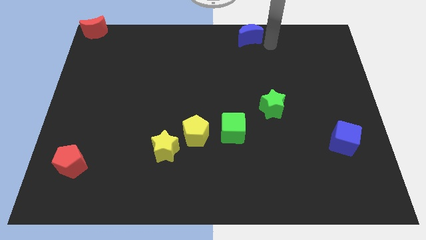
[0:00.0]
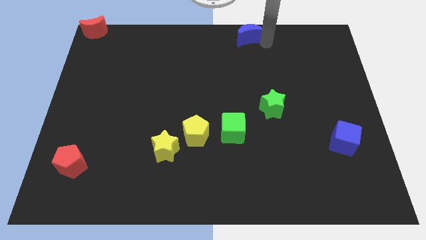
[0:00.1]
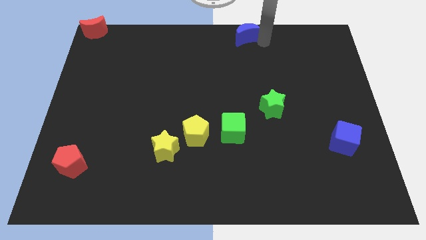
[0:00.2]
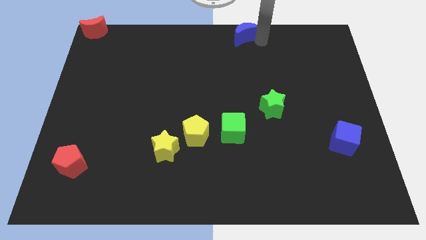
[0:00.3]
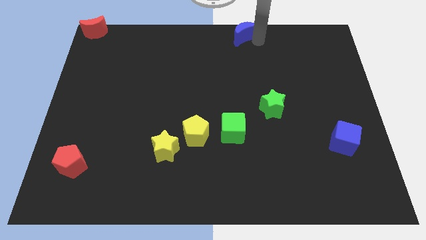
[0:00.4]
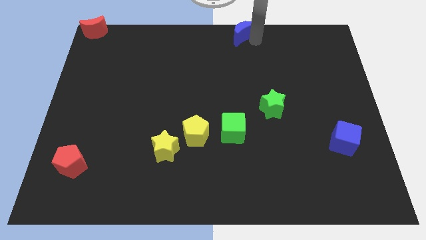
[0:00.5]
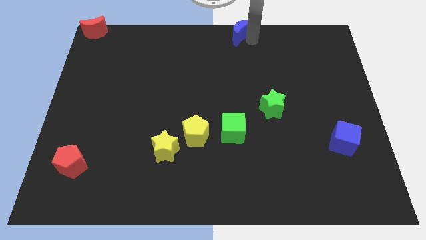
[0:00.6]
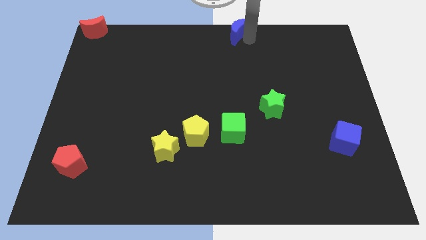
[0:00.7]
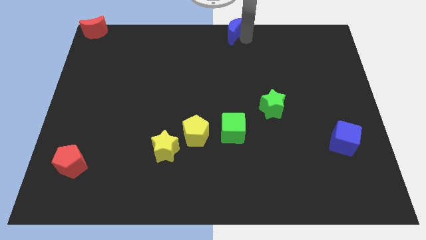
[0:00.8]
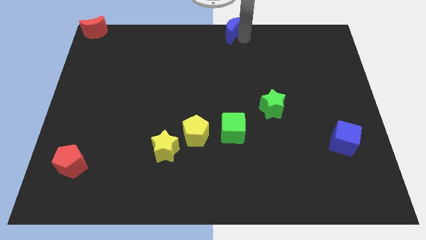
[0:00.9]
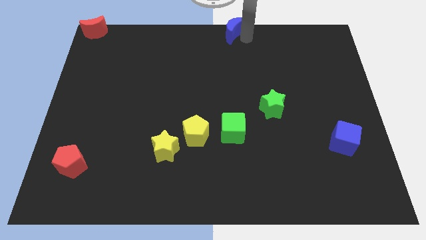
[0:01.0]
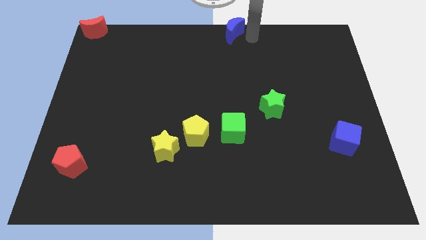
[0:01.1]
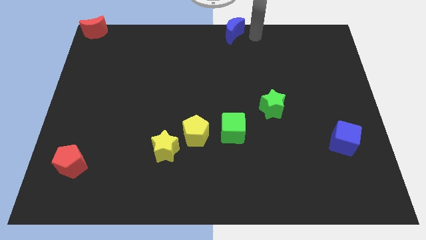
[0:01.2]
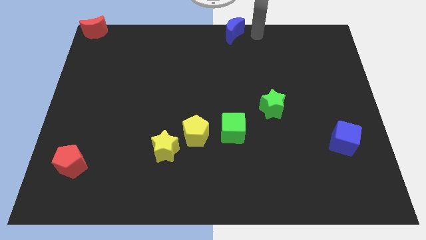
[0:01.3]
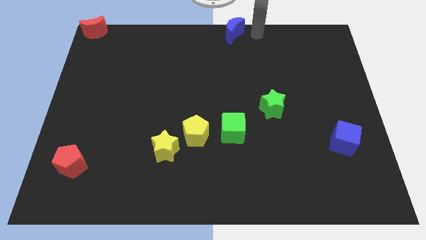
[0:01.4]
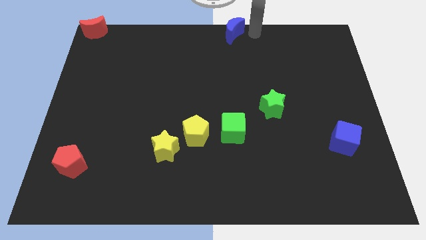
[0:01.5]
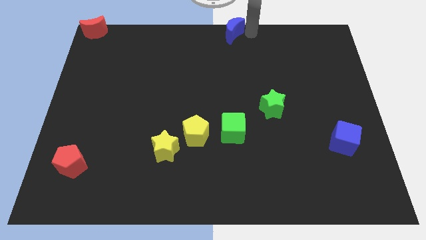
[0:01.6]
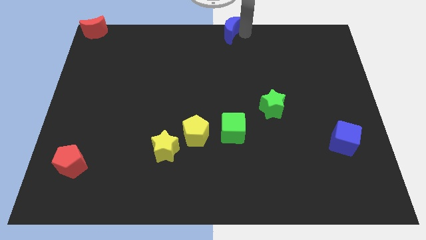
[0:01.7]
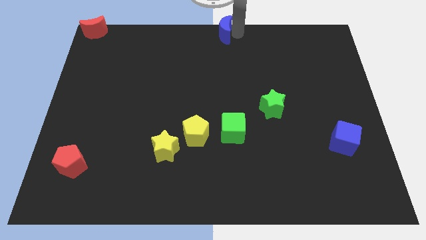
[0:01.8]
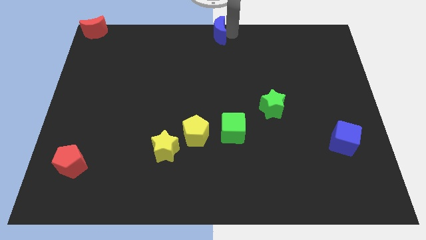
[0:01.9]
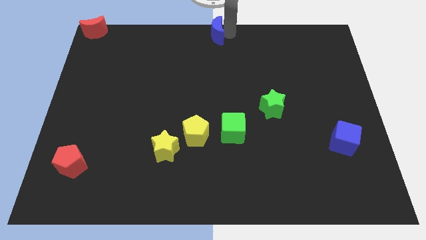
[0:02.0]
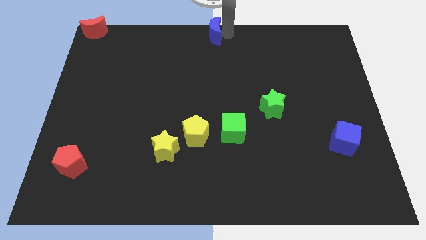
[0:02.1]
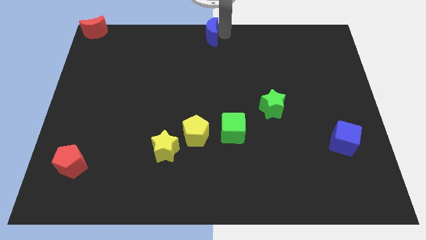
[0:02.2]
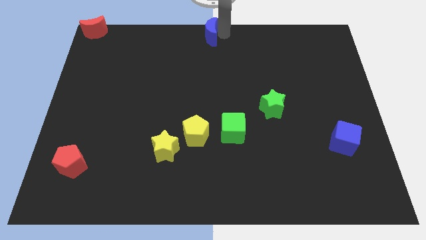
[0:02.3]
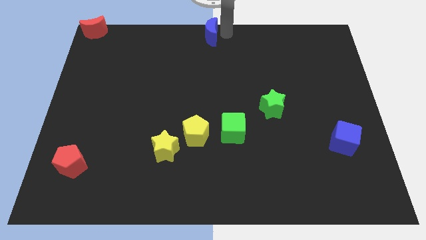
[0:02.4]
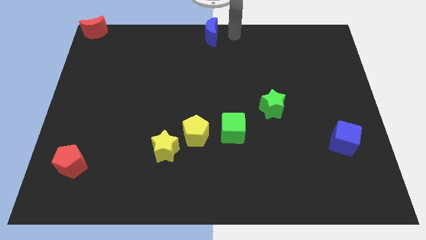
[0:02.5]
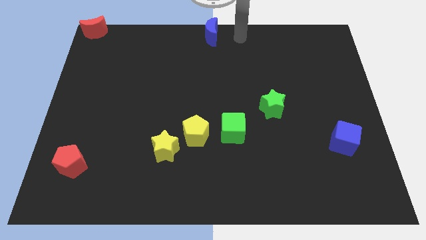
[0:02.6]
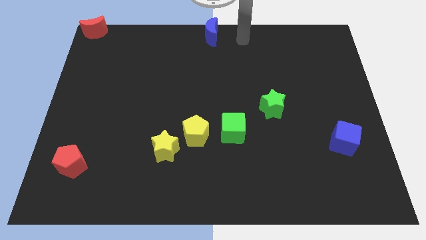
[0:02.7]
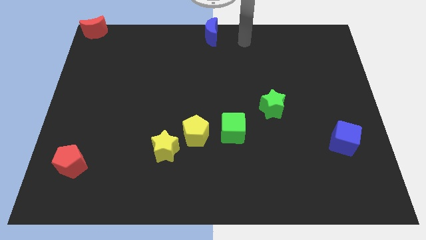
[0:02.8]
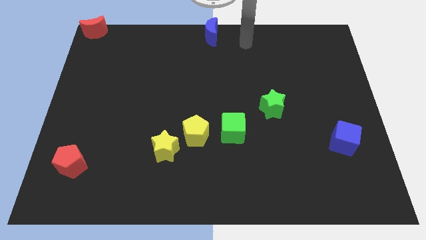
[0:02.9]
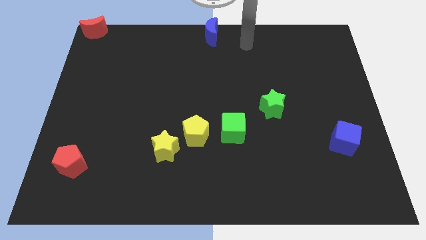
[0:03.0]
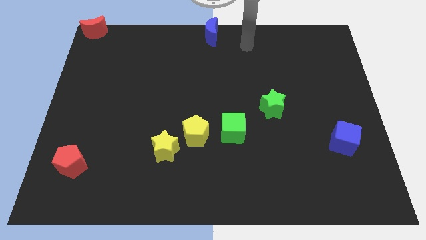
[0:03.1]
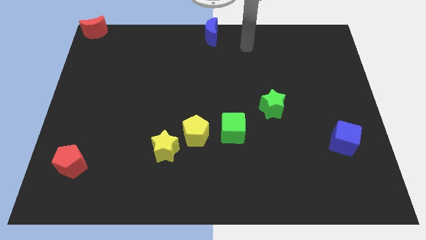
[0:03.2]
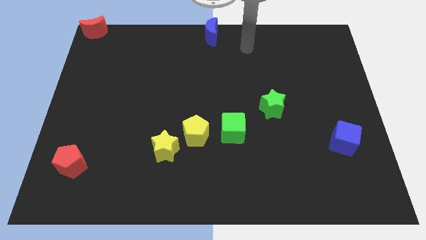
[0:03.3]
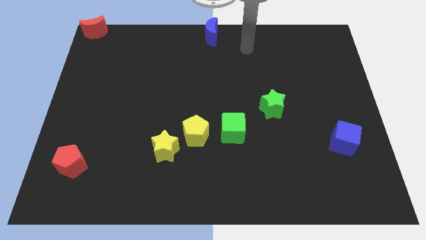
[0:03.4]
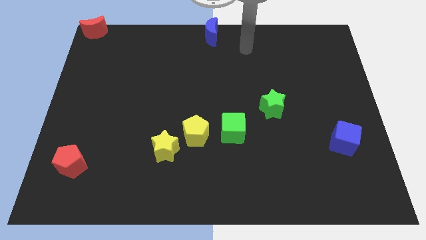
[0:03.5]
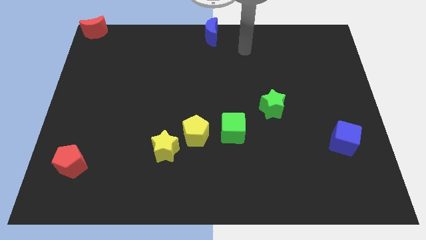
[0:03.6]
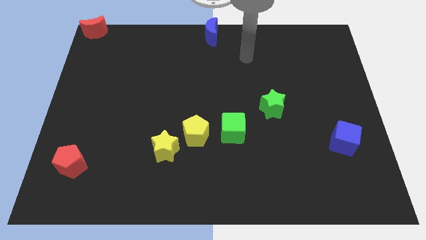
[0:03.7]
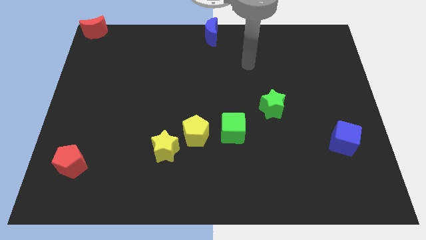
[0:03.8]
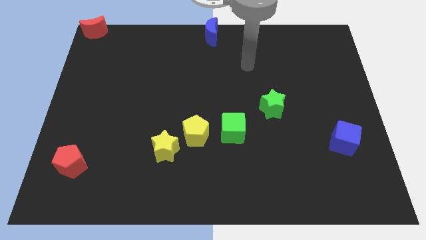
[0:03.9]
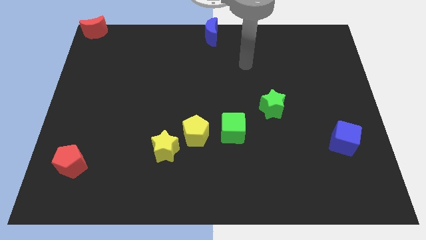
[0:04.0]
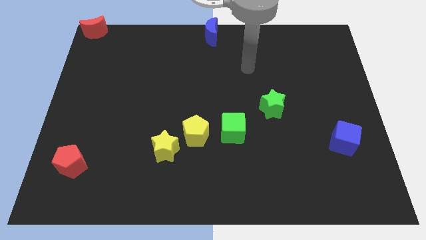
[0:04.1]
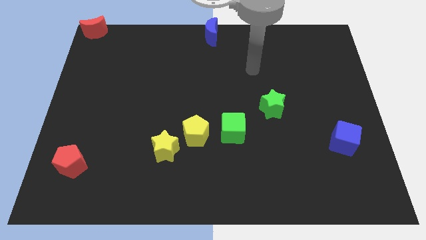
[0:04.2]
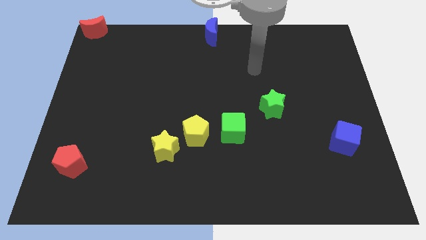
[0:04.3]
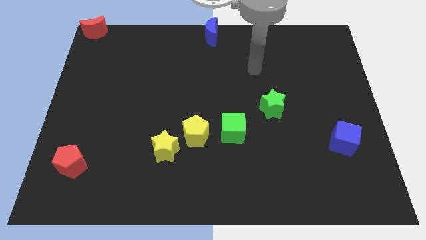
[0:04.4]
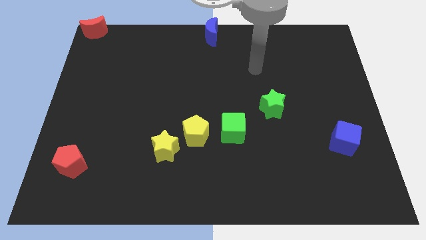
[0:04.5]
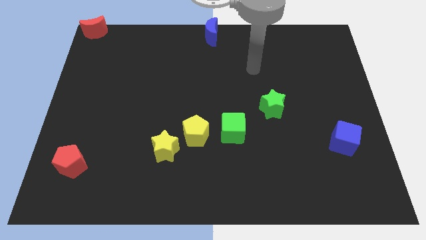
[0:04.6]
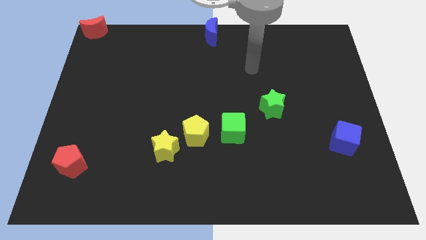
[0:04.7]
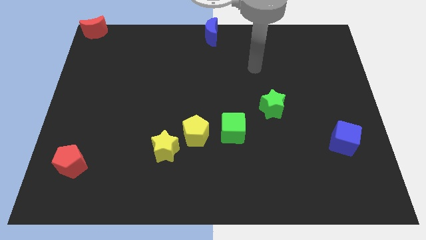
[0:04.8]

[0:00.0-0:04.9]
drag blue moon towards left side of the board

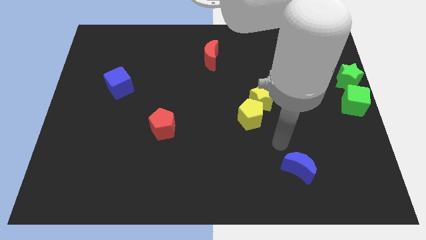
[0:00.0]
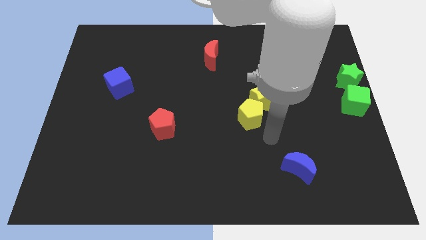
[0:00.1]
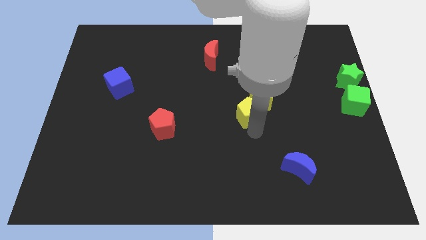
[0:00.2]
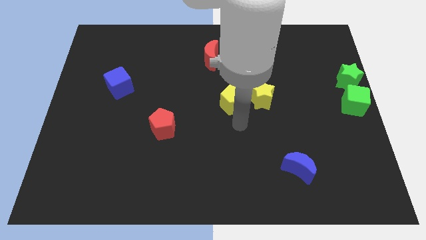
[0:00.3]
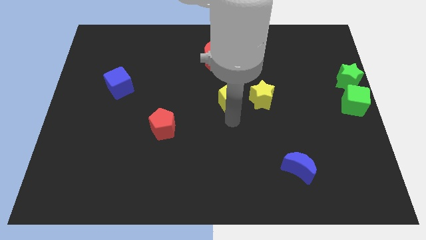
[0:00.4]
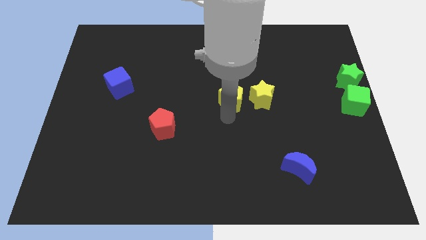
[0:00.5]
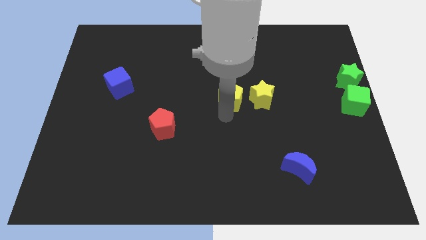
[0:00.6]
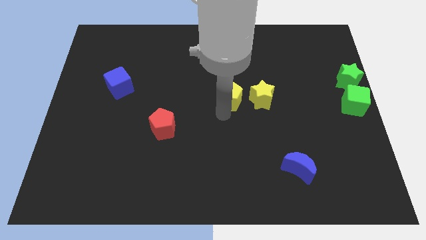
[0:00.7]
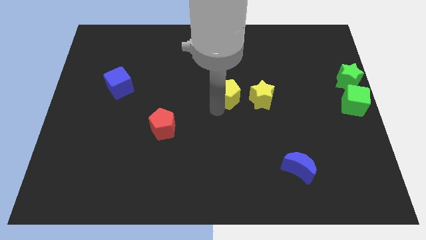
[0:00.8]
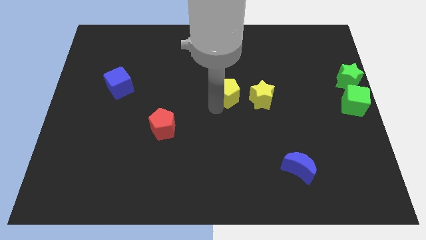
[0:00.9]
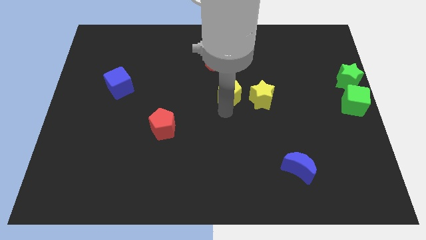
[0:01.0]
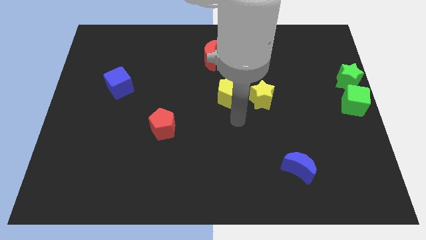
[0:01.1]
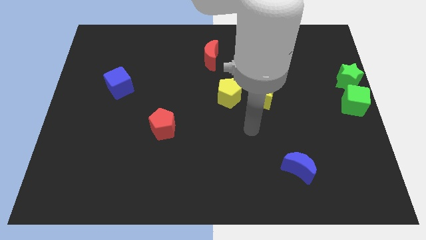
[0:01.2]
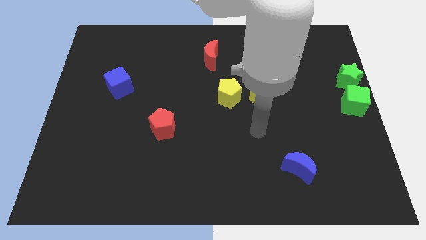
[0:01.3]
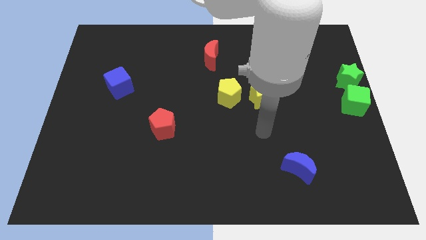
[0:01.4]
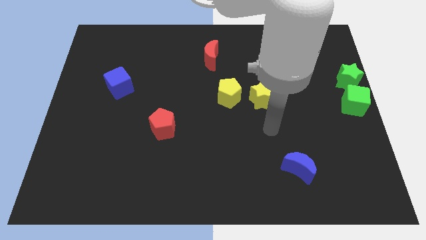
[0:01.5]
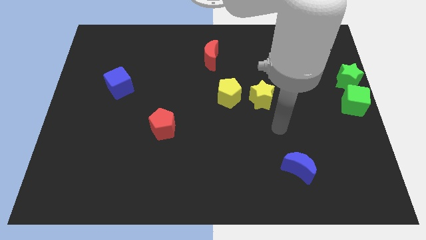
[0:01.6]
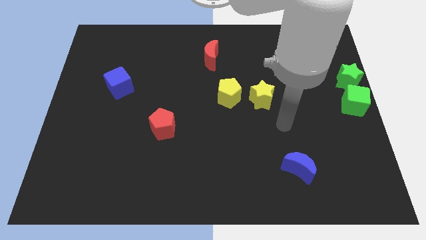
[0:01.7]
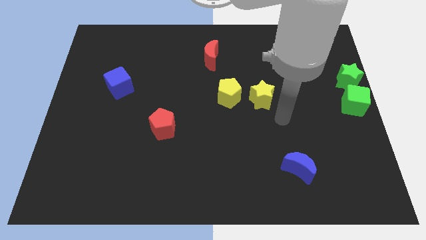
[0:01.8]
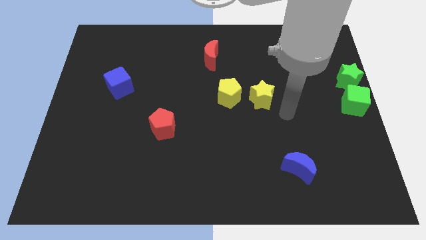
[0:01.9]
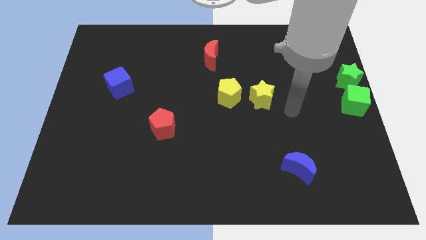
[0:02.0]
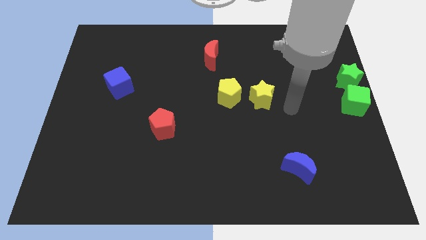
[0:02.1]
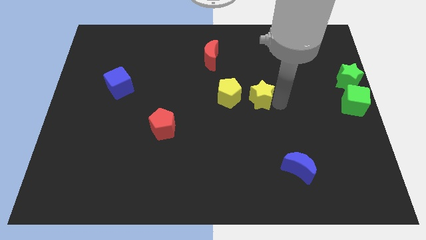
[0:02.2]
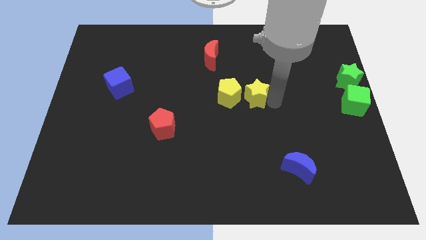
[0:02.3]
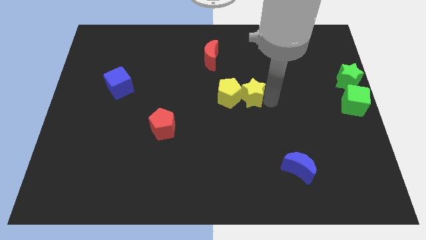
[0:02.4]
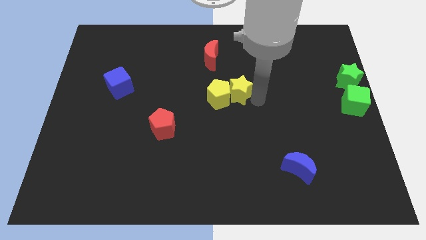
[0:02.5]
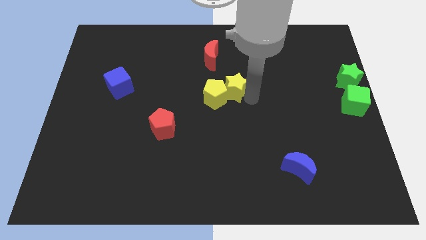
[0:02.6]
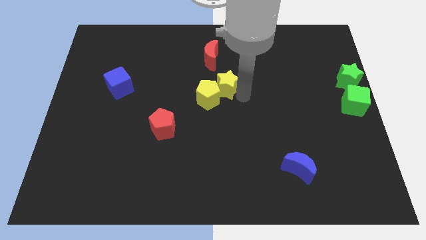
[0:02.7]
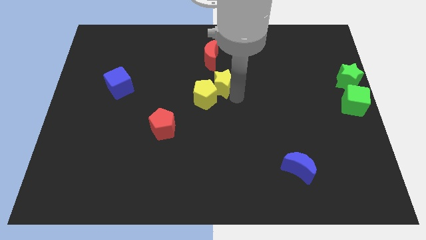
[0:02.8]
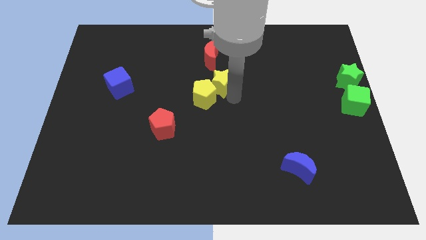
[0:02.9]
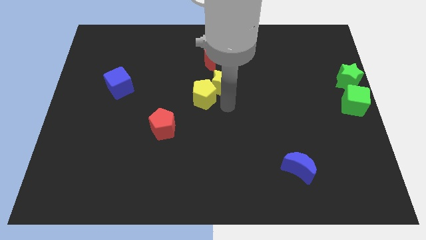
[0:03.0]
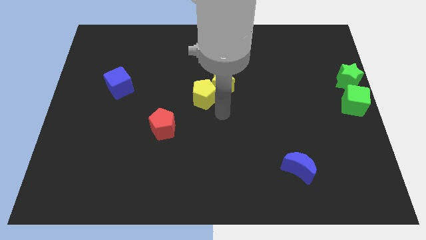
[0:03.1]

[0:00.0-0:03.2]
move the yellow blocks at the center of the board

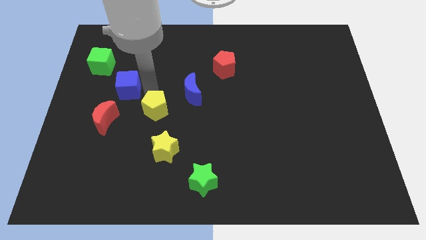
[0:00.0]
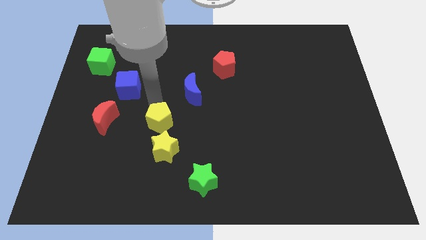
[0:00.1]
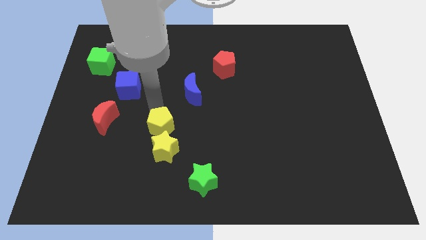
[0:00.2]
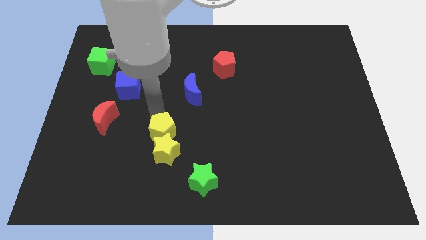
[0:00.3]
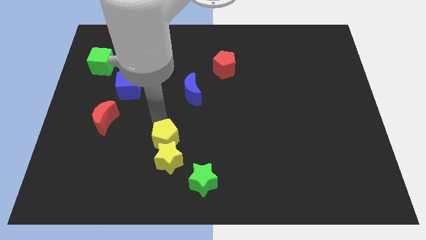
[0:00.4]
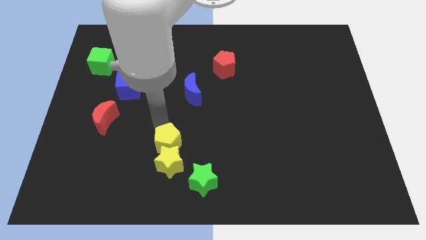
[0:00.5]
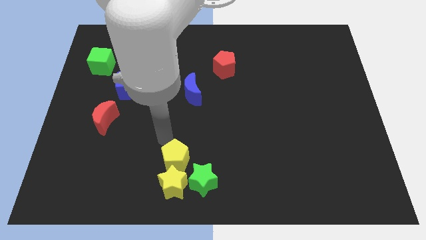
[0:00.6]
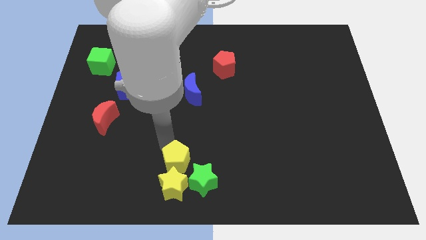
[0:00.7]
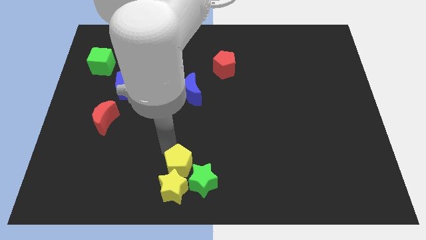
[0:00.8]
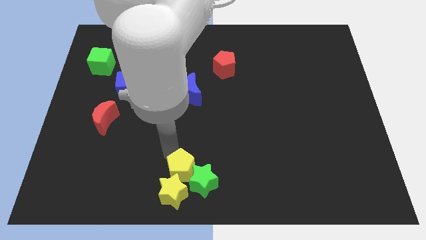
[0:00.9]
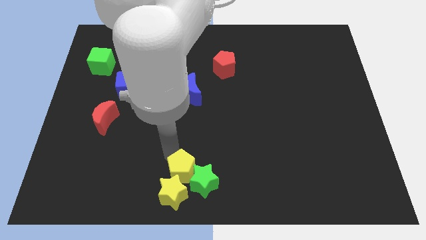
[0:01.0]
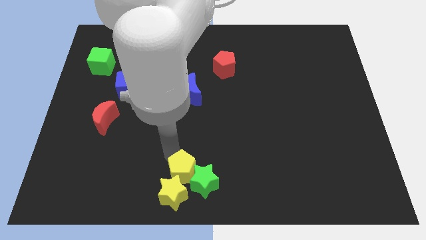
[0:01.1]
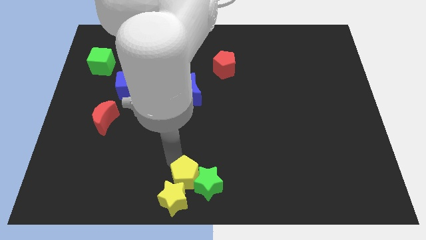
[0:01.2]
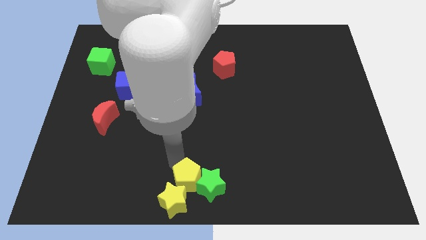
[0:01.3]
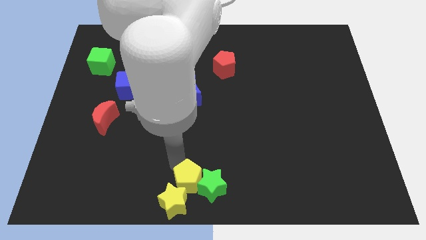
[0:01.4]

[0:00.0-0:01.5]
move yellow pentagon with yellow star towards bottom center of the board
